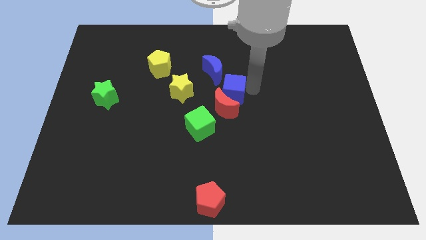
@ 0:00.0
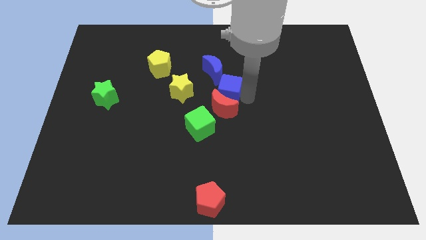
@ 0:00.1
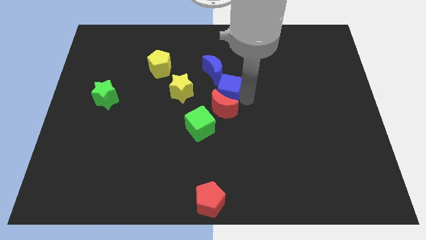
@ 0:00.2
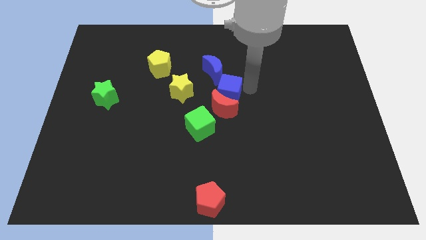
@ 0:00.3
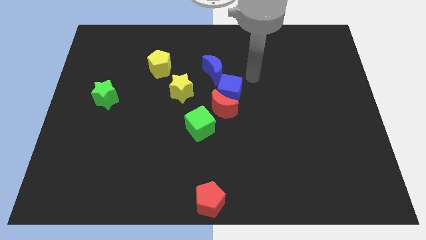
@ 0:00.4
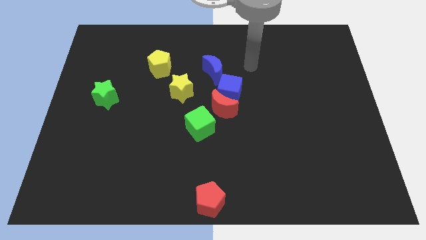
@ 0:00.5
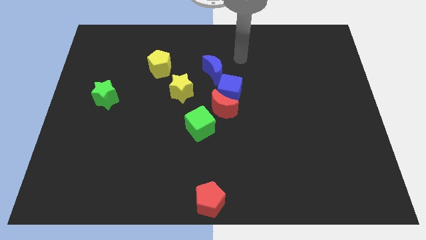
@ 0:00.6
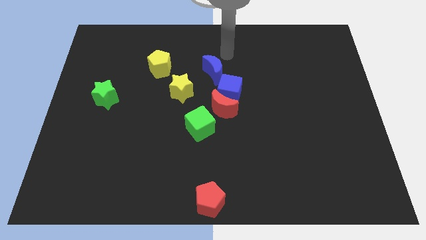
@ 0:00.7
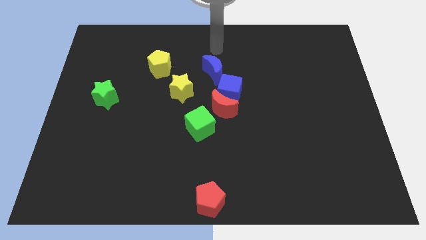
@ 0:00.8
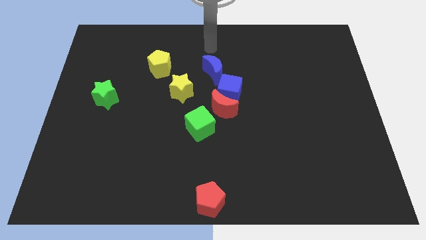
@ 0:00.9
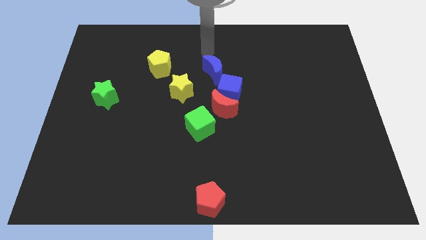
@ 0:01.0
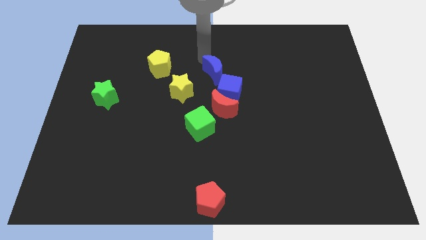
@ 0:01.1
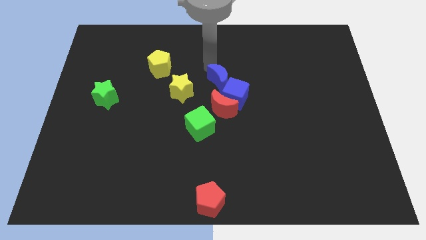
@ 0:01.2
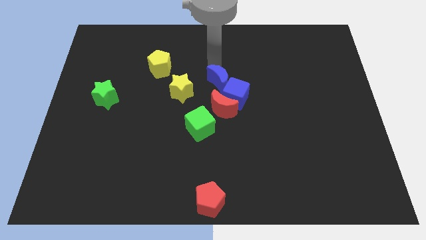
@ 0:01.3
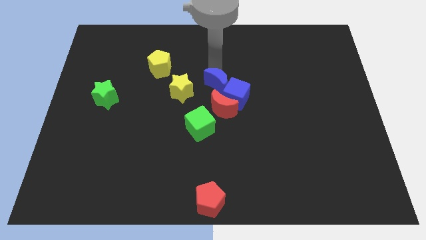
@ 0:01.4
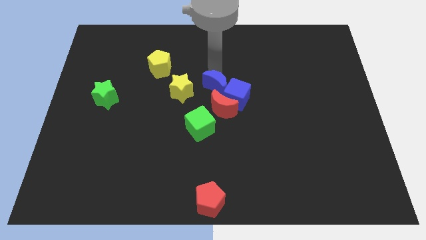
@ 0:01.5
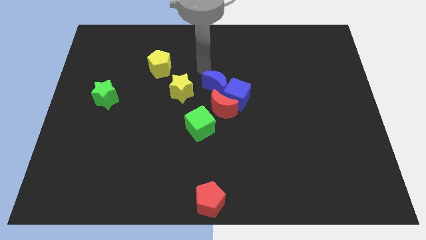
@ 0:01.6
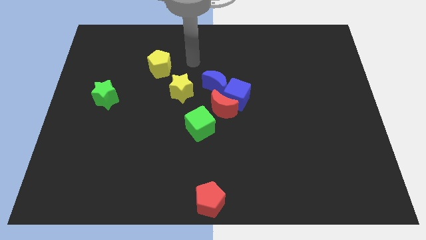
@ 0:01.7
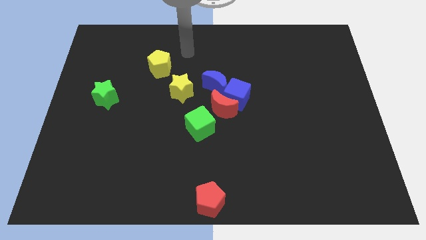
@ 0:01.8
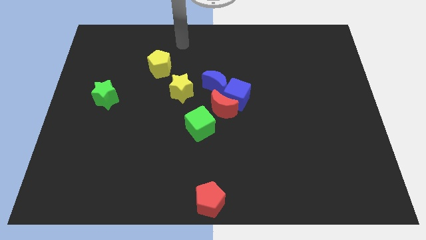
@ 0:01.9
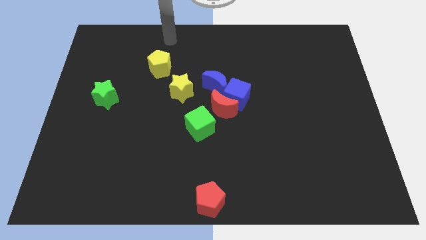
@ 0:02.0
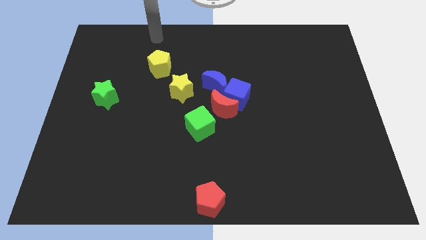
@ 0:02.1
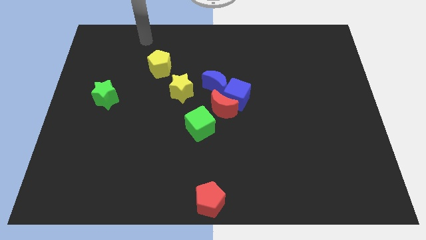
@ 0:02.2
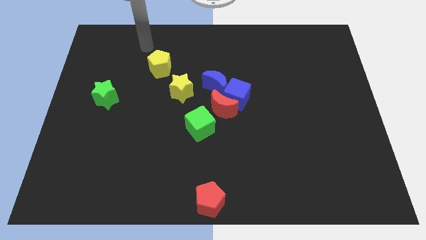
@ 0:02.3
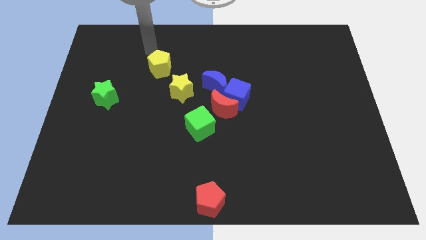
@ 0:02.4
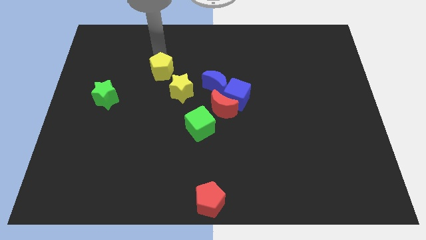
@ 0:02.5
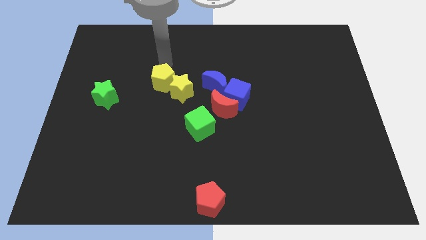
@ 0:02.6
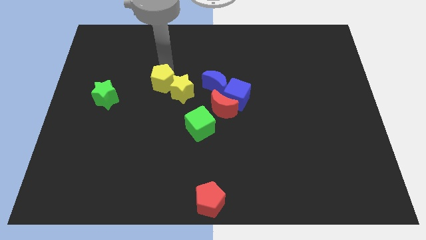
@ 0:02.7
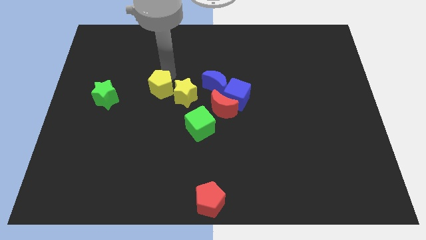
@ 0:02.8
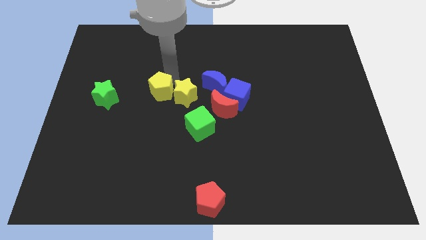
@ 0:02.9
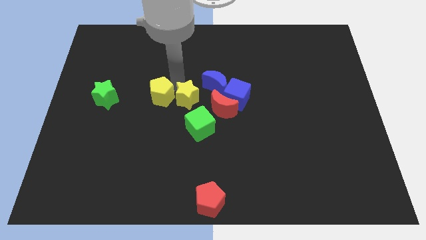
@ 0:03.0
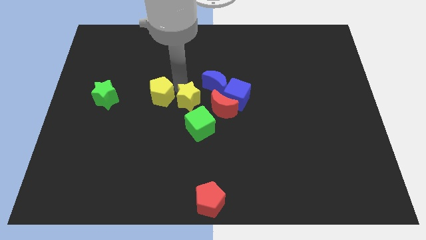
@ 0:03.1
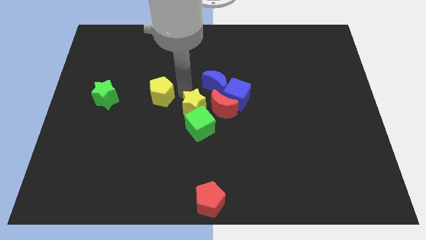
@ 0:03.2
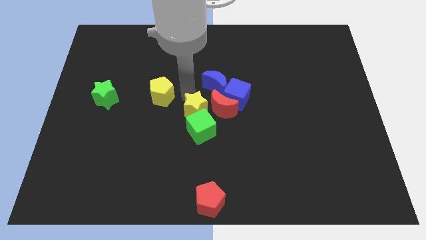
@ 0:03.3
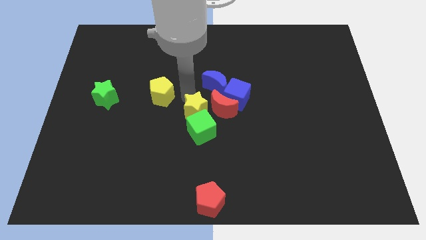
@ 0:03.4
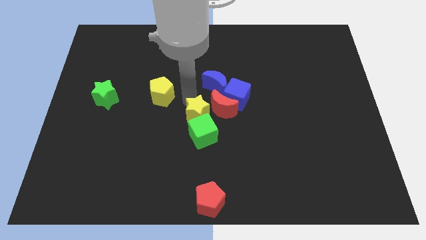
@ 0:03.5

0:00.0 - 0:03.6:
push the yellow star into the green cube

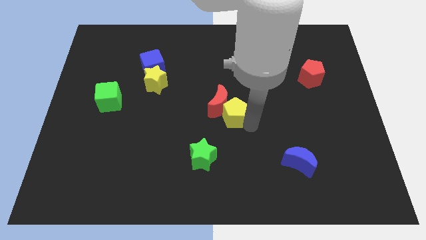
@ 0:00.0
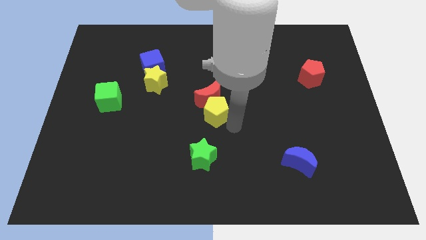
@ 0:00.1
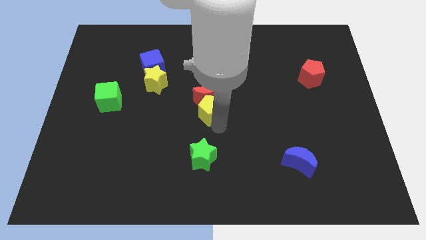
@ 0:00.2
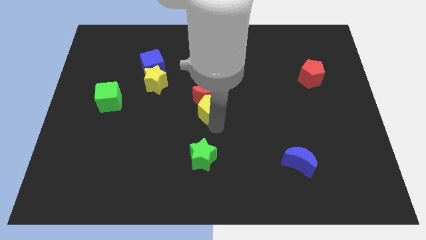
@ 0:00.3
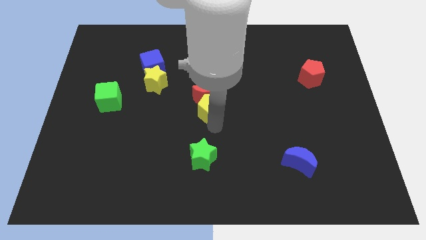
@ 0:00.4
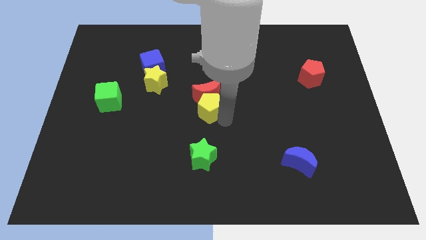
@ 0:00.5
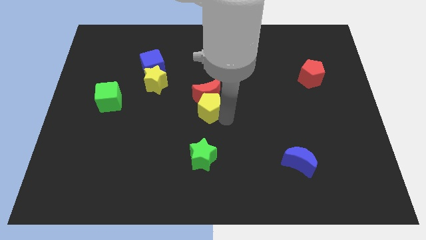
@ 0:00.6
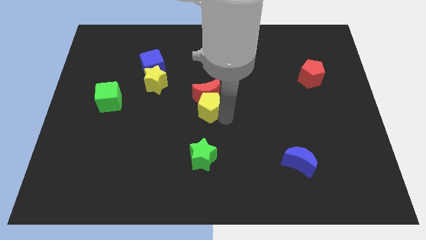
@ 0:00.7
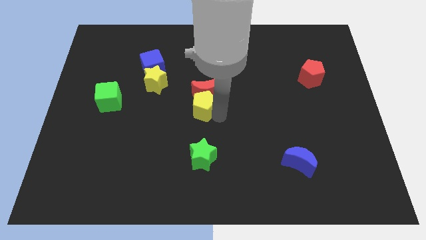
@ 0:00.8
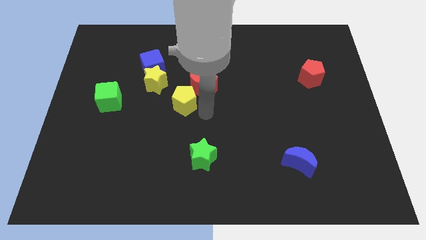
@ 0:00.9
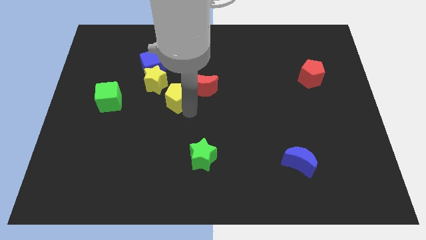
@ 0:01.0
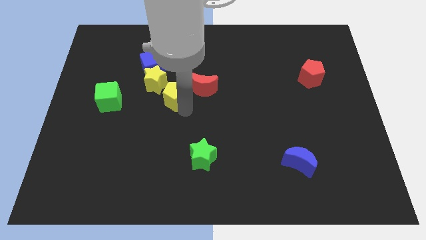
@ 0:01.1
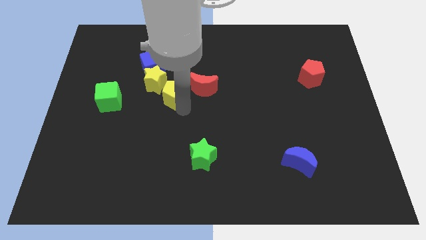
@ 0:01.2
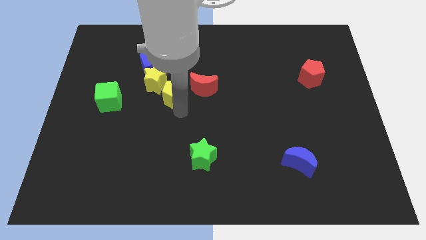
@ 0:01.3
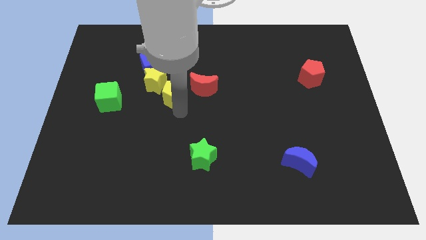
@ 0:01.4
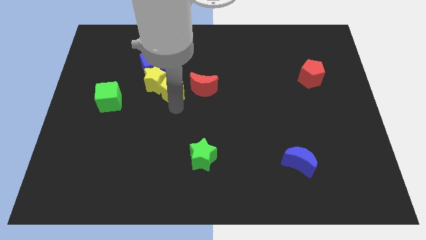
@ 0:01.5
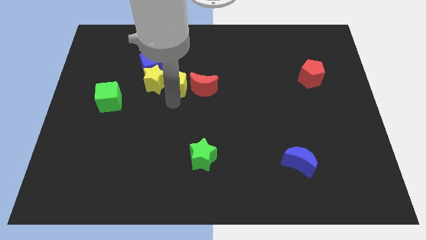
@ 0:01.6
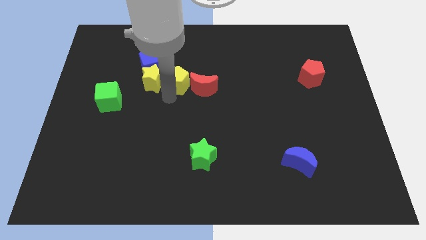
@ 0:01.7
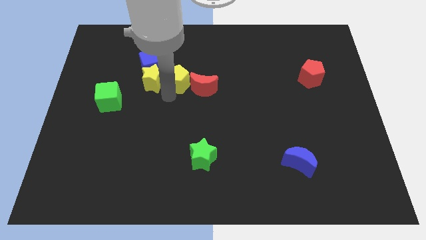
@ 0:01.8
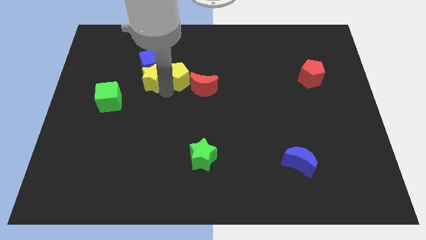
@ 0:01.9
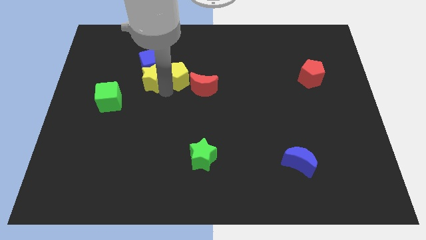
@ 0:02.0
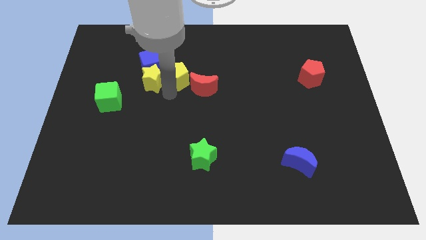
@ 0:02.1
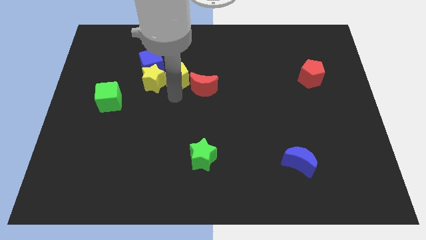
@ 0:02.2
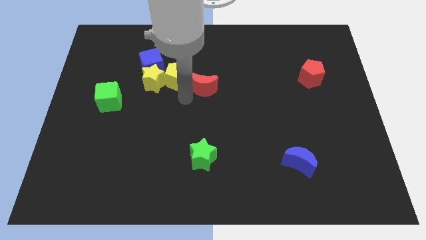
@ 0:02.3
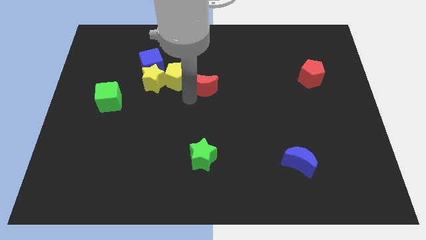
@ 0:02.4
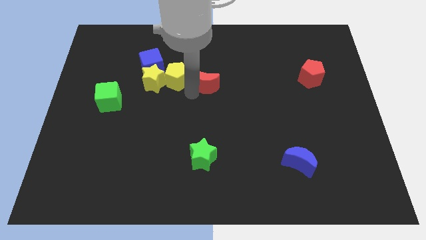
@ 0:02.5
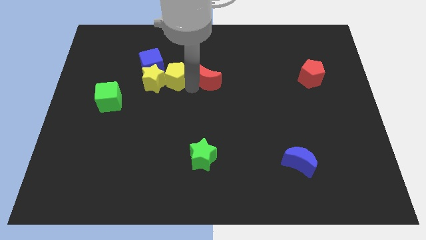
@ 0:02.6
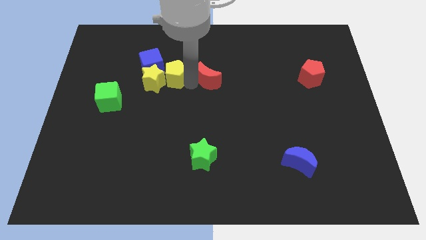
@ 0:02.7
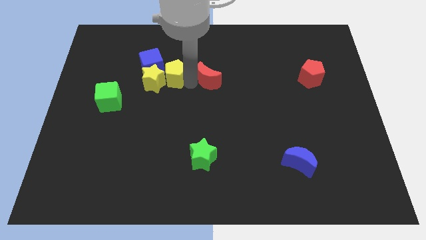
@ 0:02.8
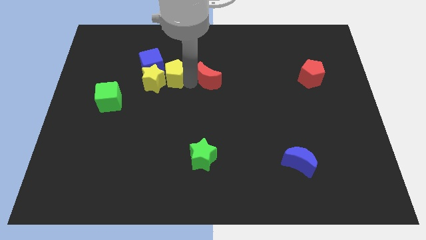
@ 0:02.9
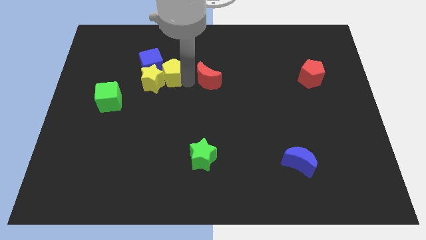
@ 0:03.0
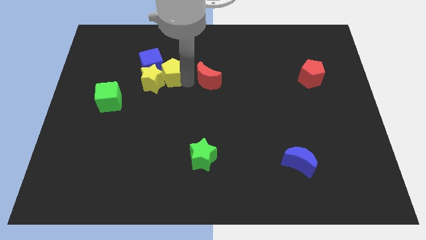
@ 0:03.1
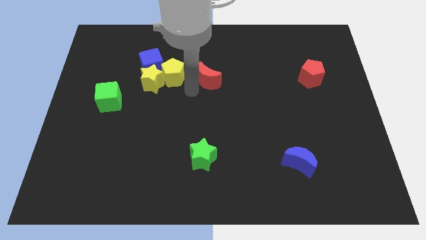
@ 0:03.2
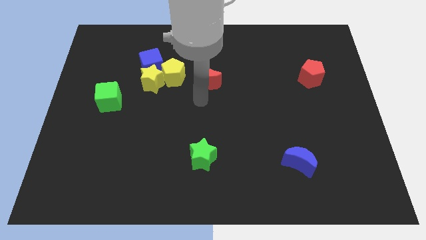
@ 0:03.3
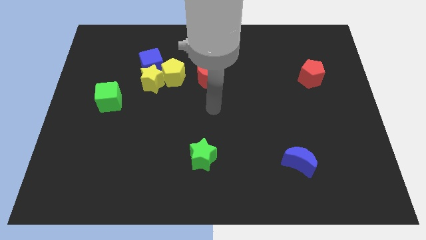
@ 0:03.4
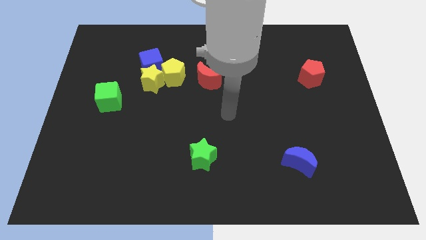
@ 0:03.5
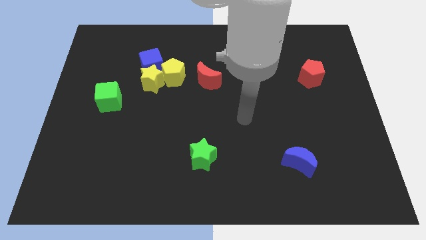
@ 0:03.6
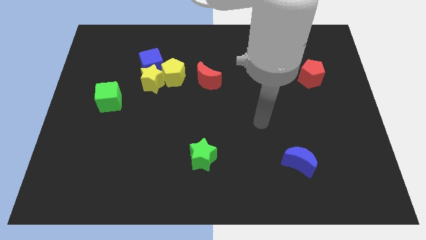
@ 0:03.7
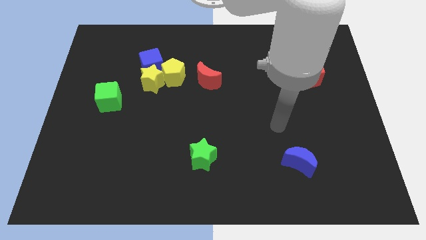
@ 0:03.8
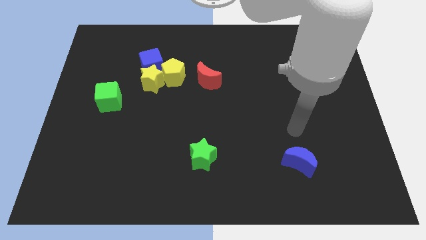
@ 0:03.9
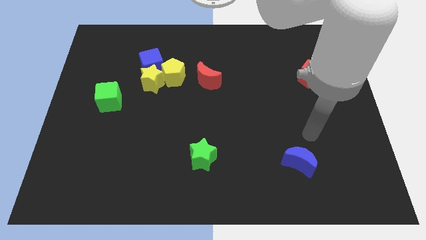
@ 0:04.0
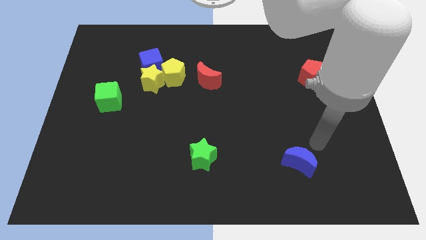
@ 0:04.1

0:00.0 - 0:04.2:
push the yellow pentagon into a yellow star

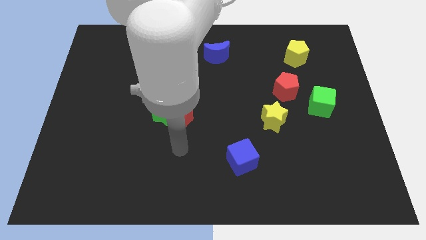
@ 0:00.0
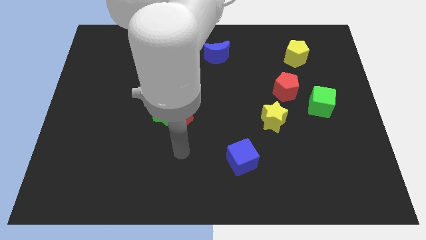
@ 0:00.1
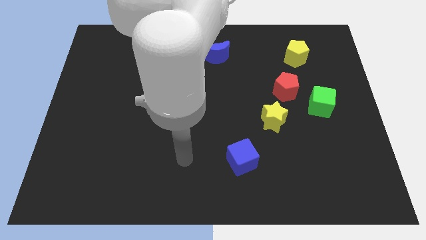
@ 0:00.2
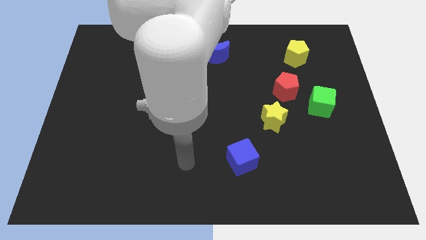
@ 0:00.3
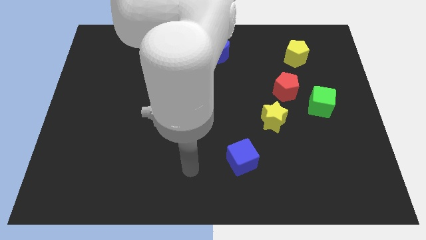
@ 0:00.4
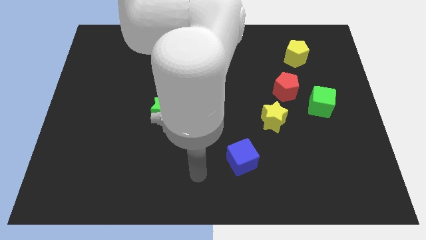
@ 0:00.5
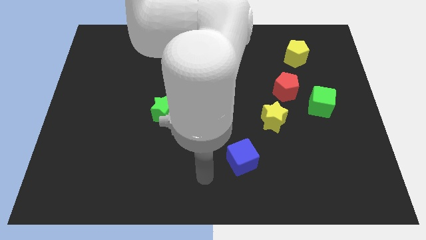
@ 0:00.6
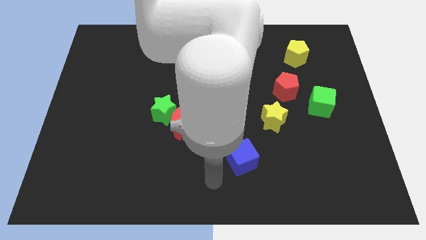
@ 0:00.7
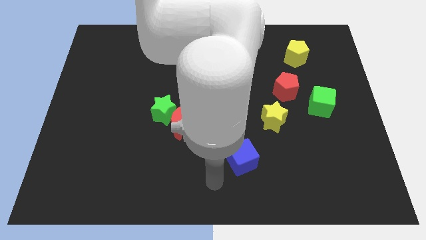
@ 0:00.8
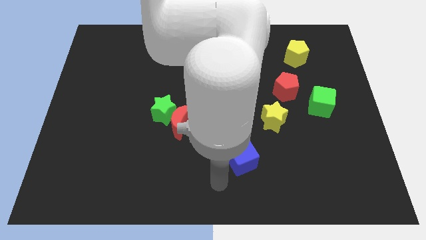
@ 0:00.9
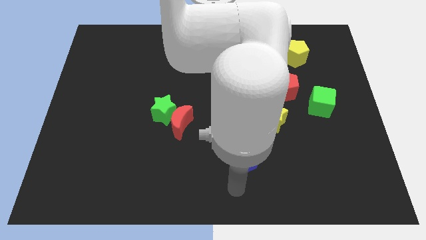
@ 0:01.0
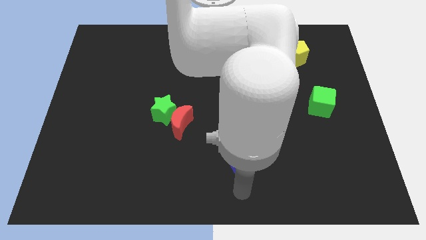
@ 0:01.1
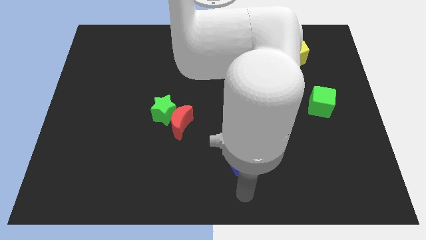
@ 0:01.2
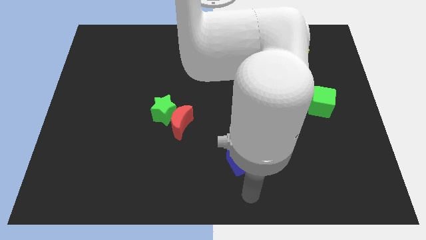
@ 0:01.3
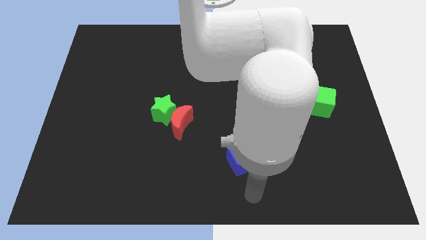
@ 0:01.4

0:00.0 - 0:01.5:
move arm to the bottom of blue cube
